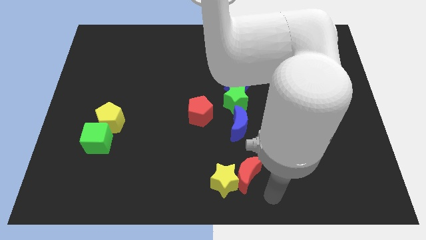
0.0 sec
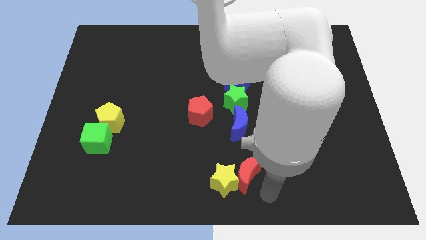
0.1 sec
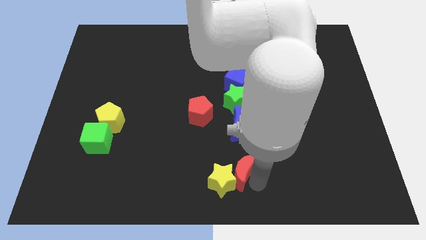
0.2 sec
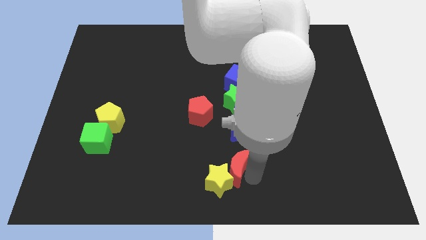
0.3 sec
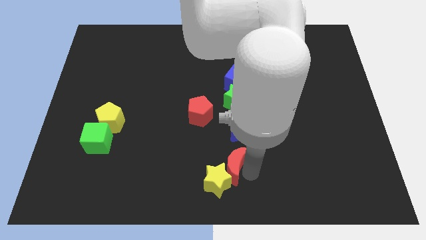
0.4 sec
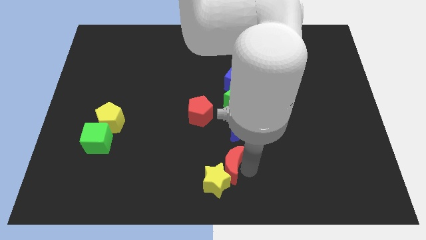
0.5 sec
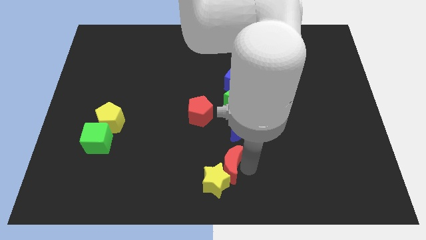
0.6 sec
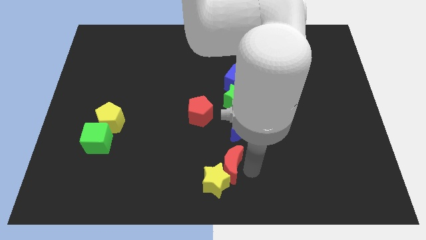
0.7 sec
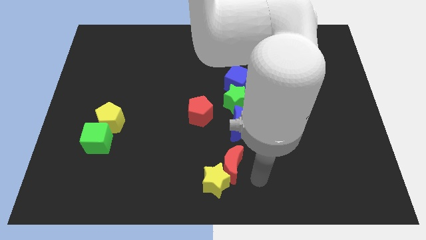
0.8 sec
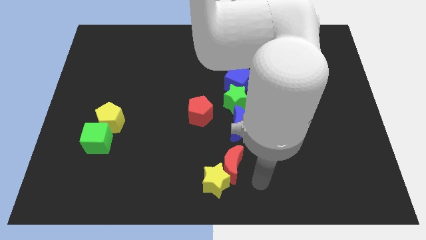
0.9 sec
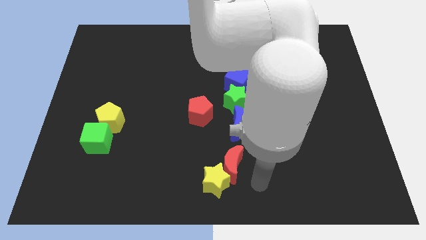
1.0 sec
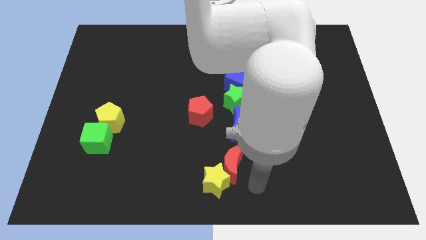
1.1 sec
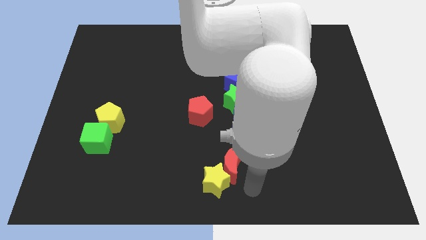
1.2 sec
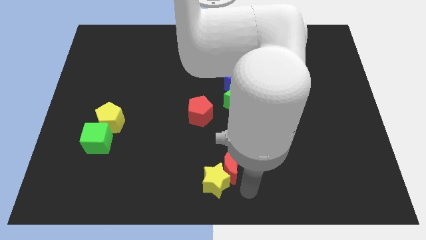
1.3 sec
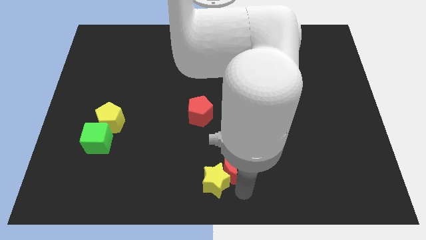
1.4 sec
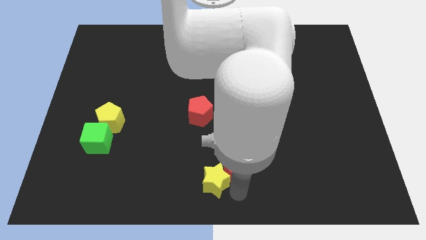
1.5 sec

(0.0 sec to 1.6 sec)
place the red crescent underneath the blue crescent

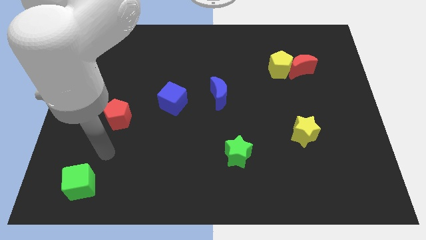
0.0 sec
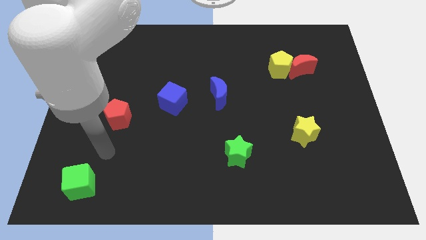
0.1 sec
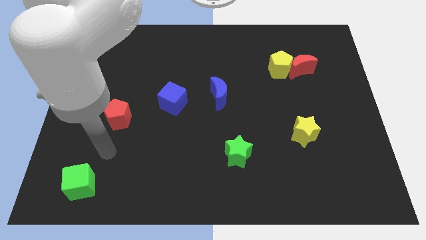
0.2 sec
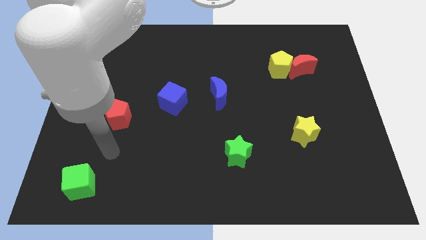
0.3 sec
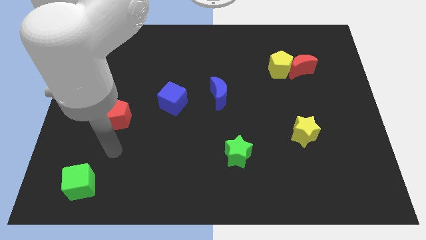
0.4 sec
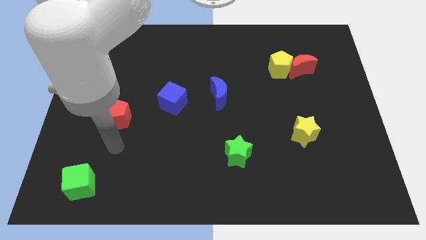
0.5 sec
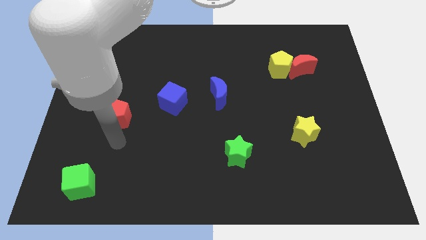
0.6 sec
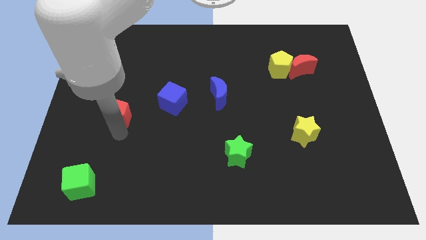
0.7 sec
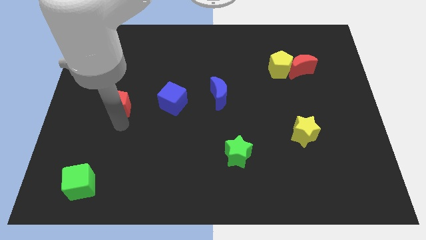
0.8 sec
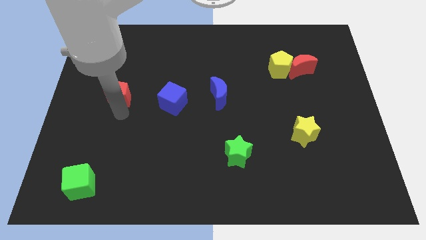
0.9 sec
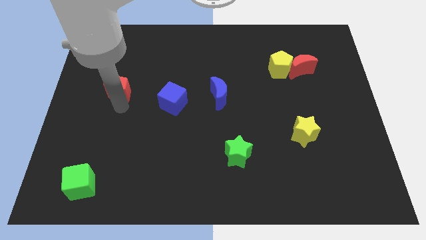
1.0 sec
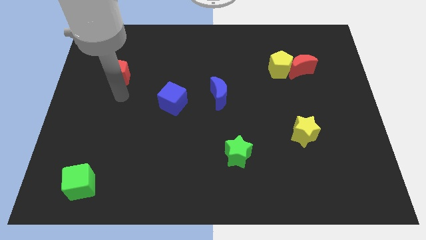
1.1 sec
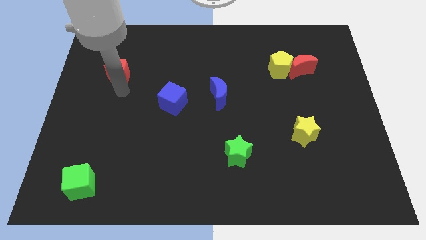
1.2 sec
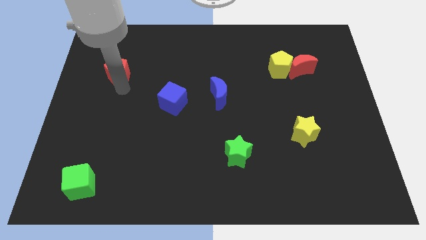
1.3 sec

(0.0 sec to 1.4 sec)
push red pentagon slightly towards upwards

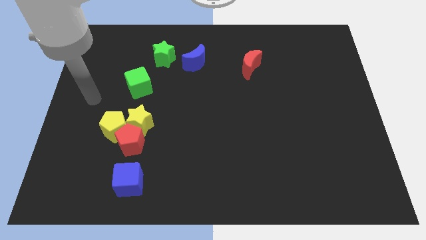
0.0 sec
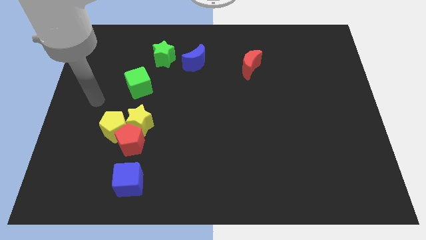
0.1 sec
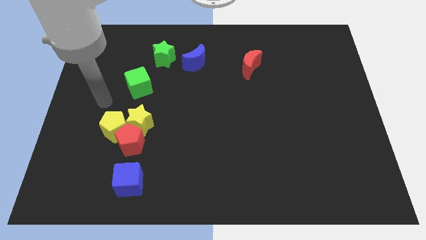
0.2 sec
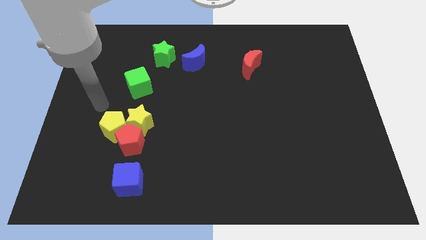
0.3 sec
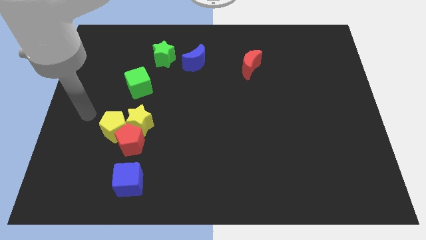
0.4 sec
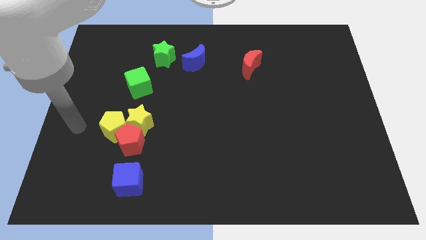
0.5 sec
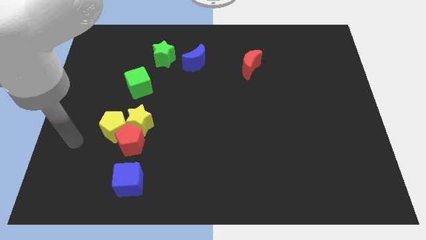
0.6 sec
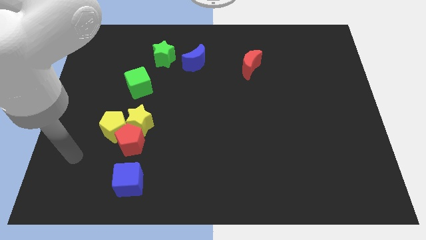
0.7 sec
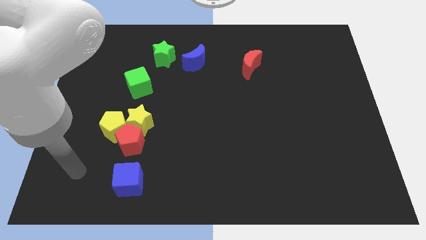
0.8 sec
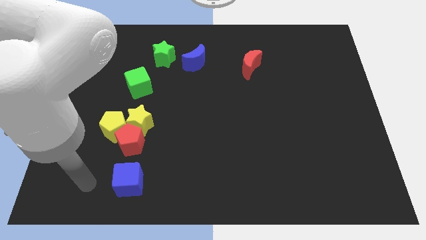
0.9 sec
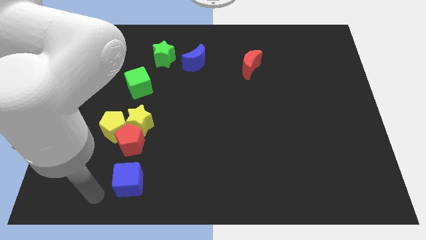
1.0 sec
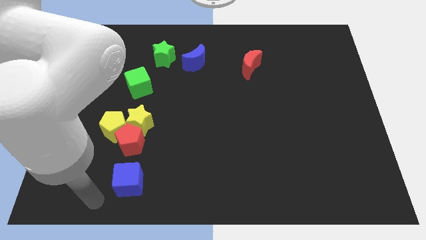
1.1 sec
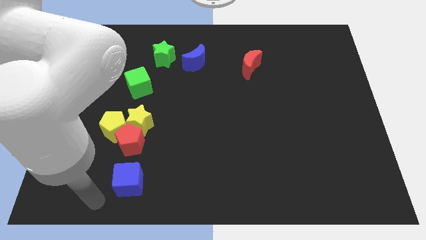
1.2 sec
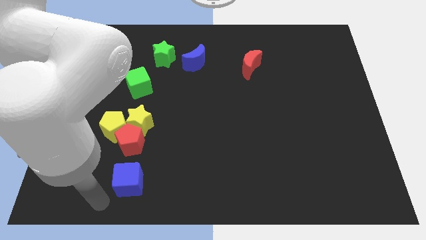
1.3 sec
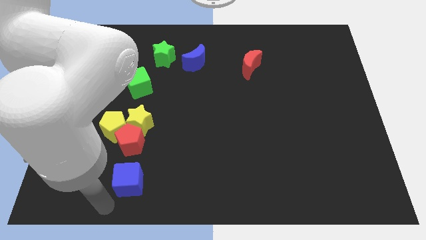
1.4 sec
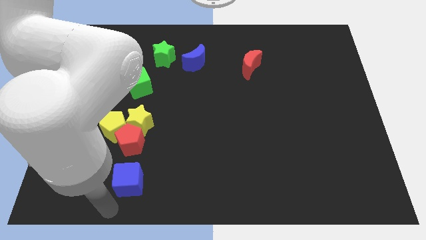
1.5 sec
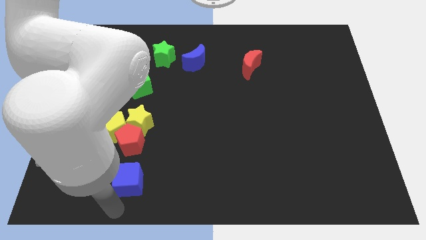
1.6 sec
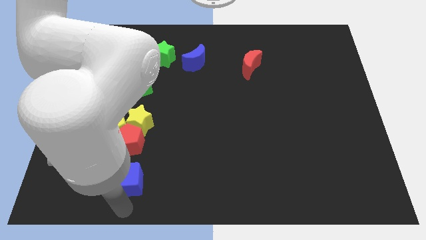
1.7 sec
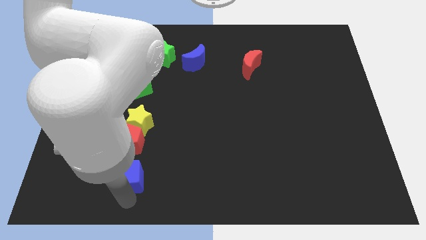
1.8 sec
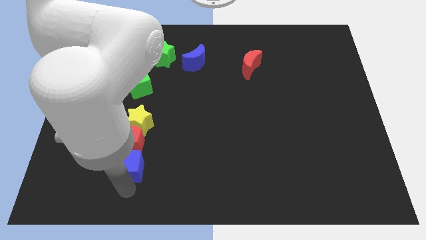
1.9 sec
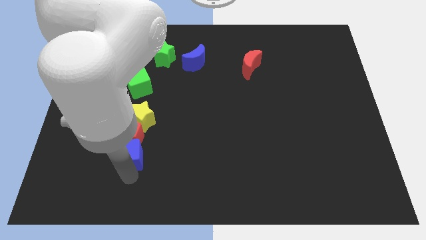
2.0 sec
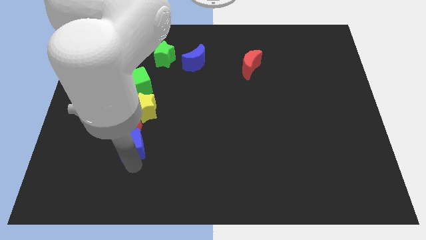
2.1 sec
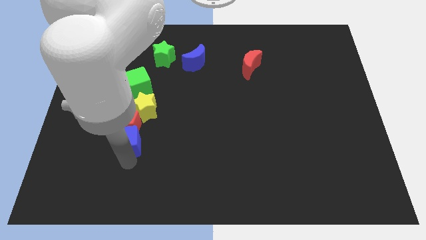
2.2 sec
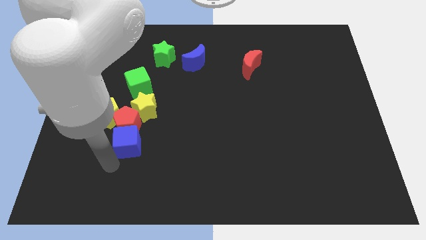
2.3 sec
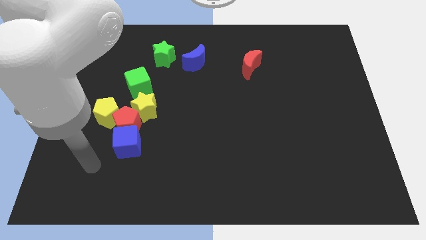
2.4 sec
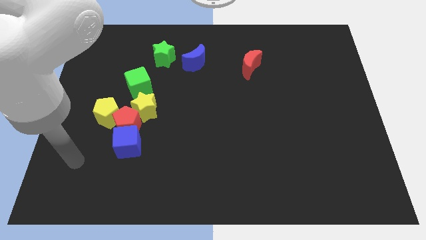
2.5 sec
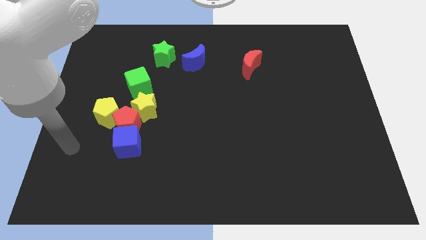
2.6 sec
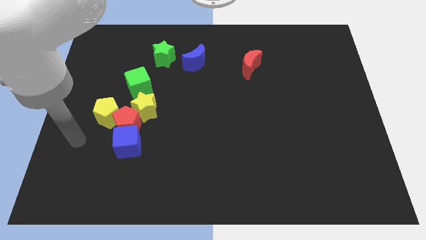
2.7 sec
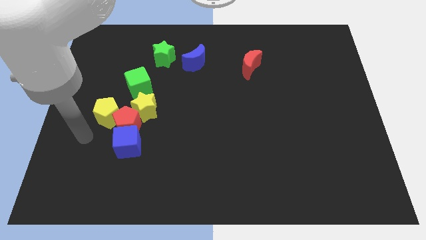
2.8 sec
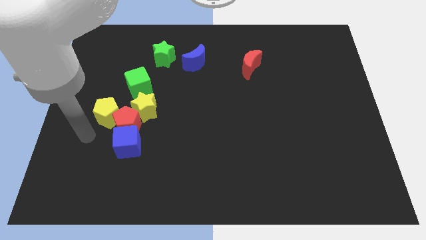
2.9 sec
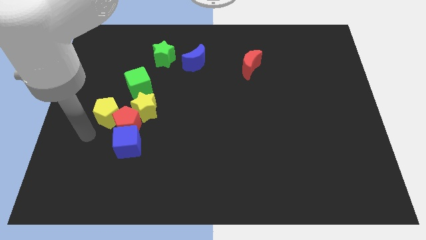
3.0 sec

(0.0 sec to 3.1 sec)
move the blue cube at the bottom side of the red pentagon

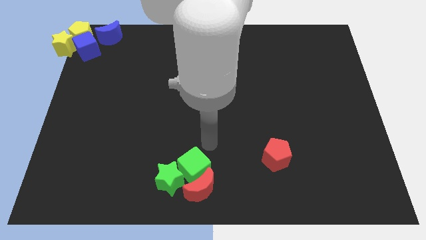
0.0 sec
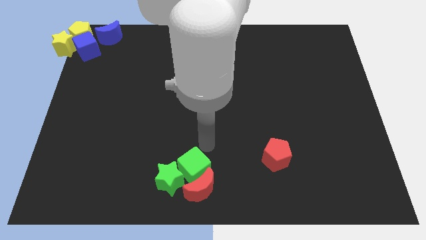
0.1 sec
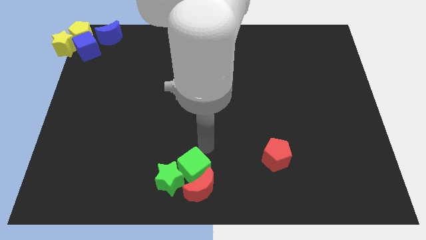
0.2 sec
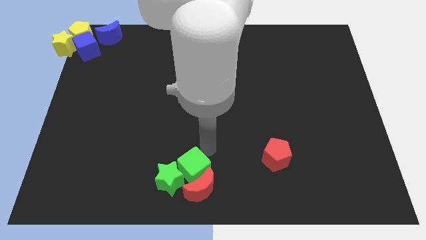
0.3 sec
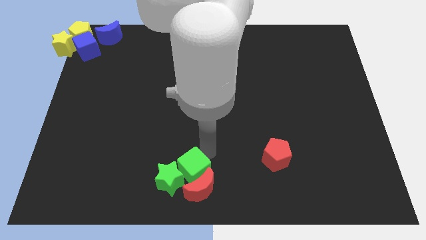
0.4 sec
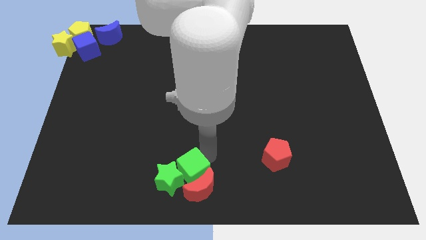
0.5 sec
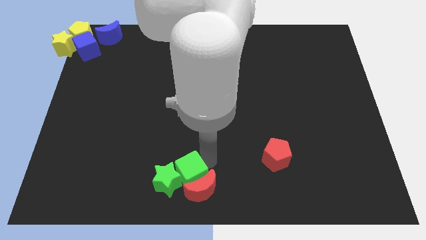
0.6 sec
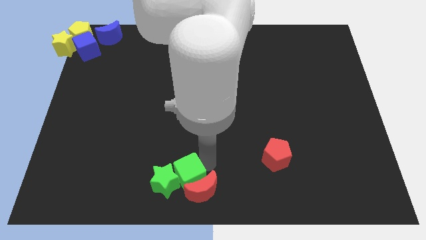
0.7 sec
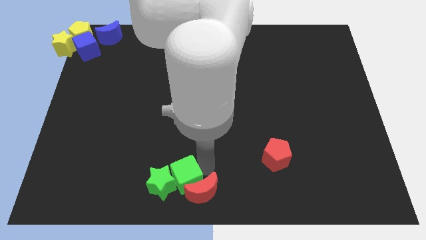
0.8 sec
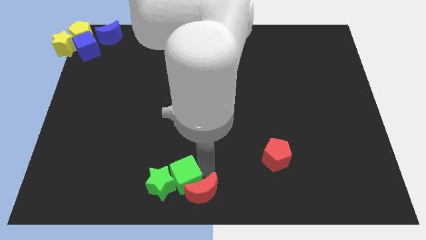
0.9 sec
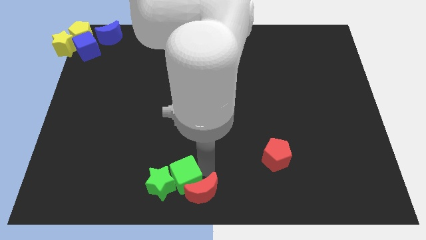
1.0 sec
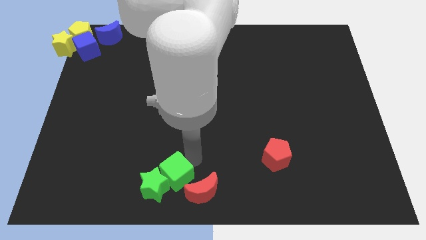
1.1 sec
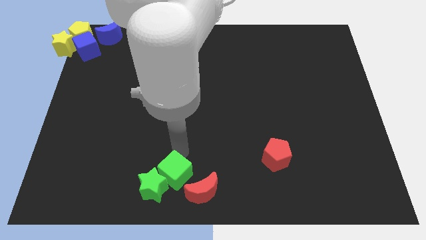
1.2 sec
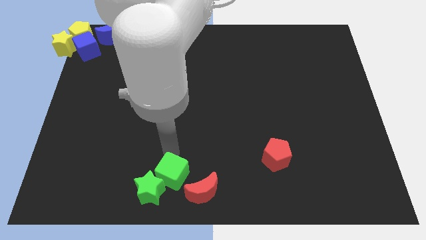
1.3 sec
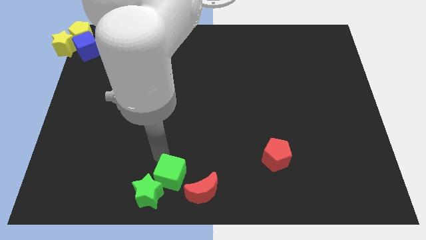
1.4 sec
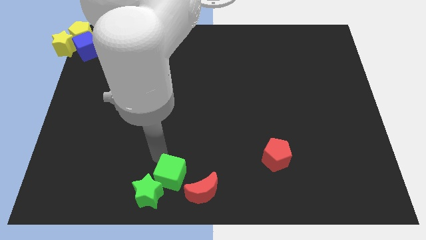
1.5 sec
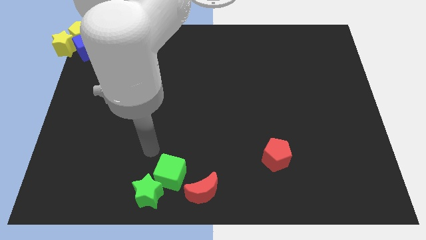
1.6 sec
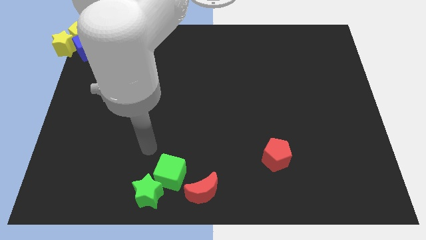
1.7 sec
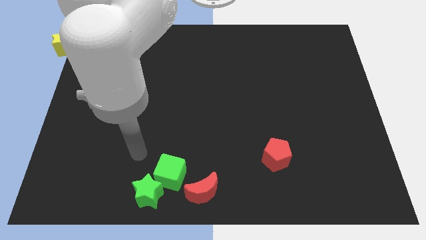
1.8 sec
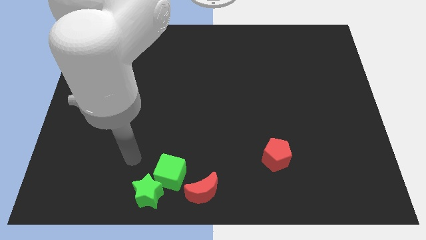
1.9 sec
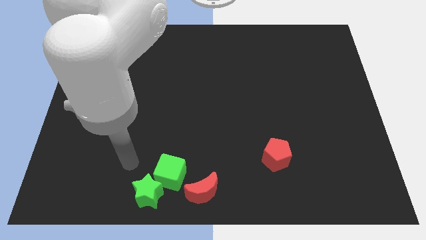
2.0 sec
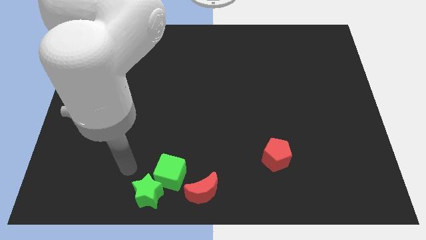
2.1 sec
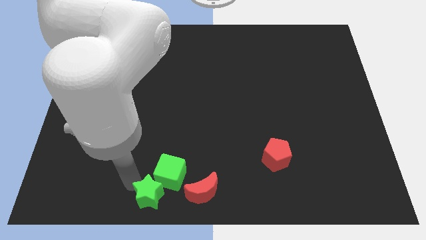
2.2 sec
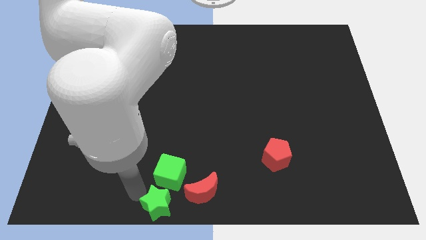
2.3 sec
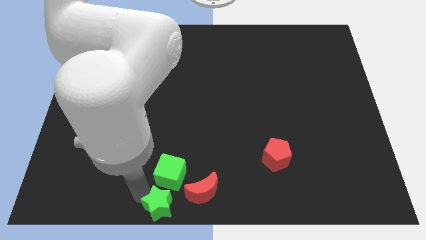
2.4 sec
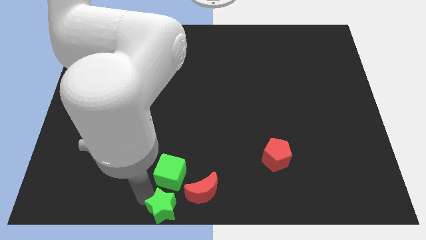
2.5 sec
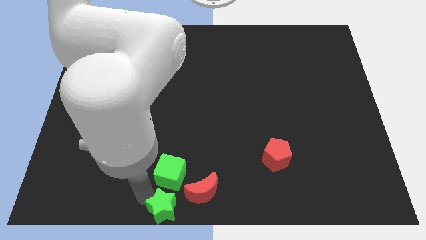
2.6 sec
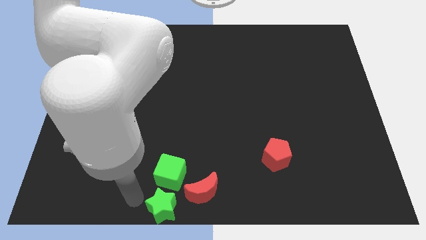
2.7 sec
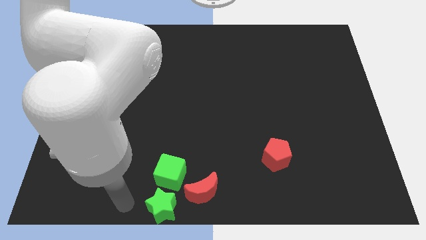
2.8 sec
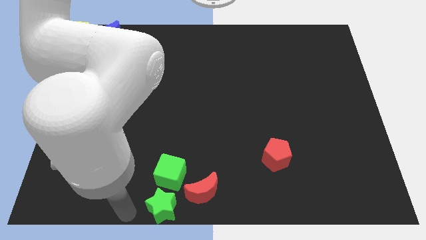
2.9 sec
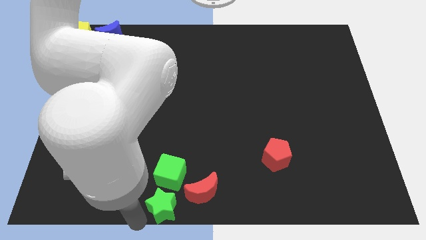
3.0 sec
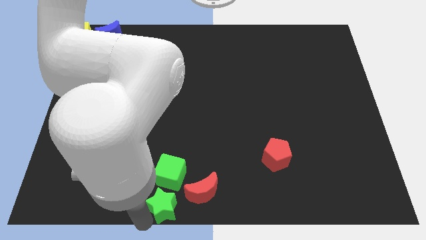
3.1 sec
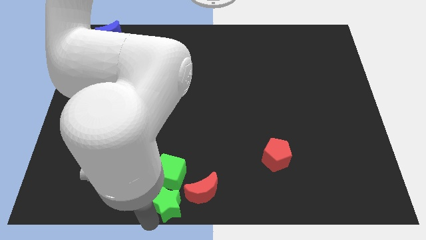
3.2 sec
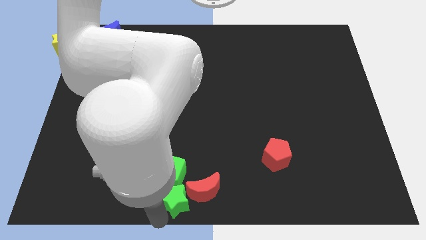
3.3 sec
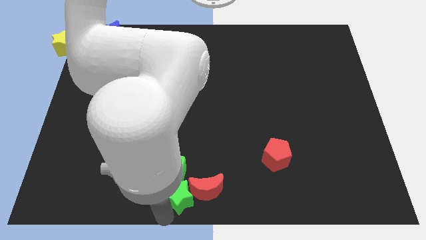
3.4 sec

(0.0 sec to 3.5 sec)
place green blocks and red crescent at bottom center
